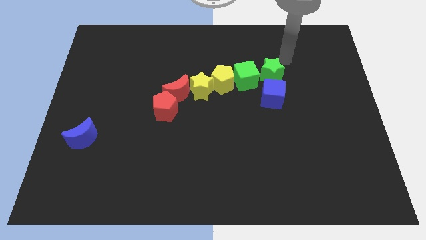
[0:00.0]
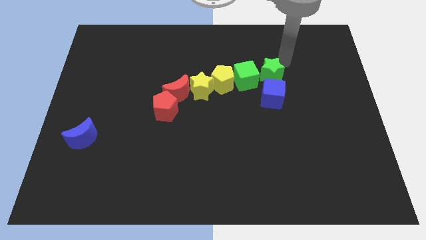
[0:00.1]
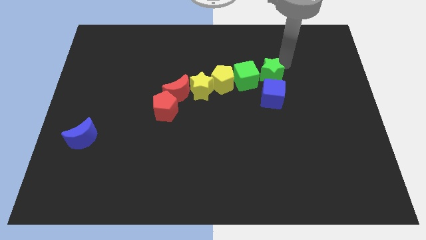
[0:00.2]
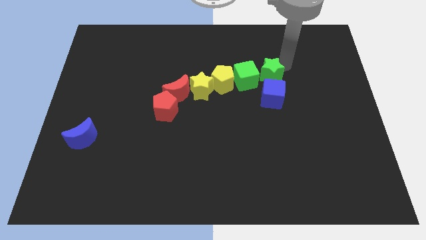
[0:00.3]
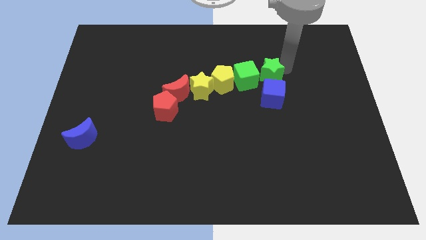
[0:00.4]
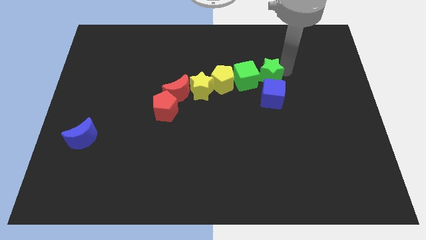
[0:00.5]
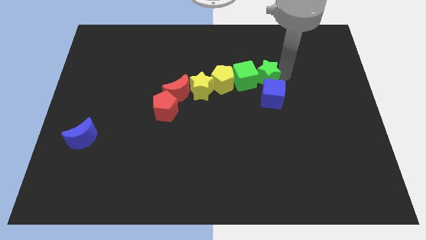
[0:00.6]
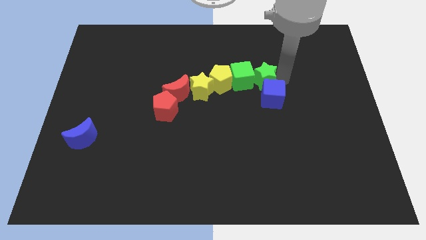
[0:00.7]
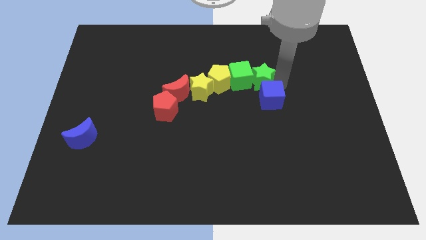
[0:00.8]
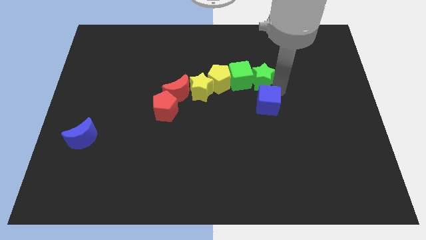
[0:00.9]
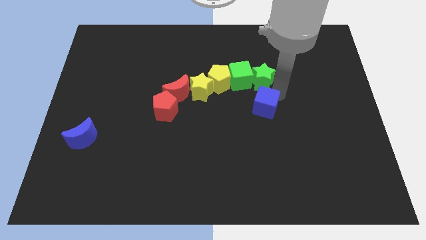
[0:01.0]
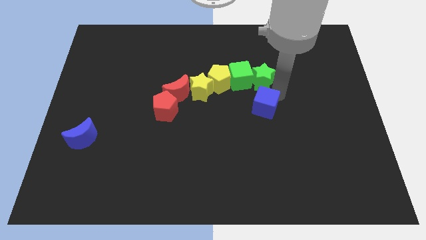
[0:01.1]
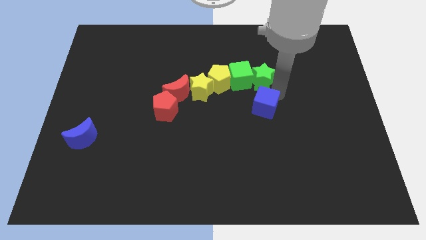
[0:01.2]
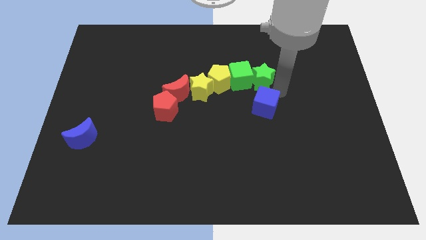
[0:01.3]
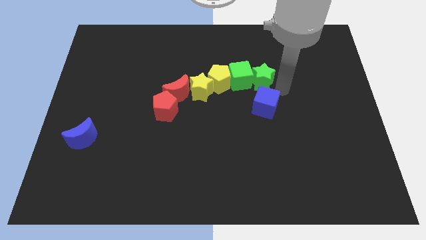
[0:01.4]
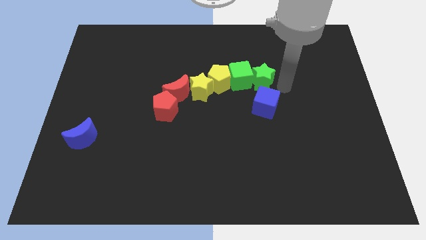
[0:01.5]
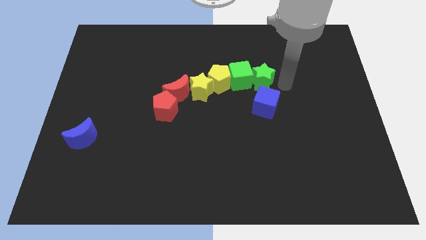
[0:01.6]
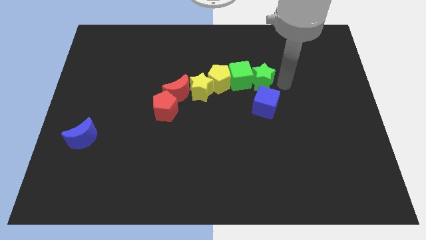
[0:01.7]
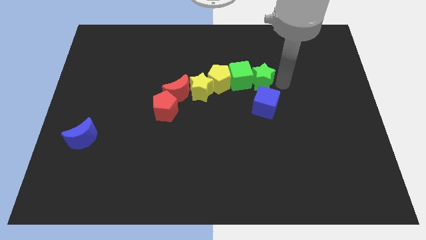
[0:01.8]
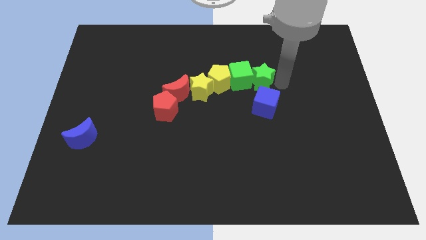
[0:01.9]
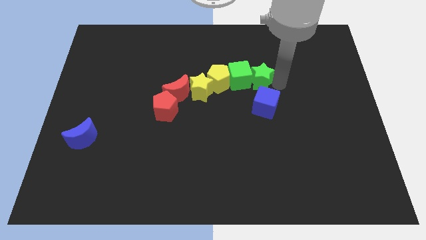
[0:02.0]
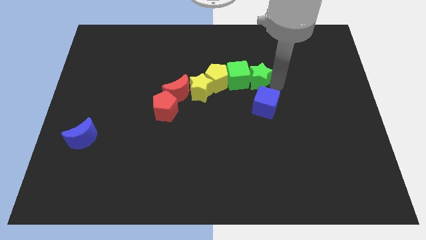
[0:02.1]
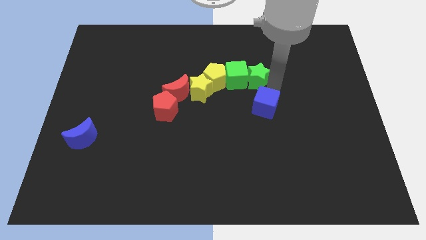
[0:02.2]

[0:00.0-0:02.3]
touch green cube with green star

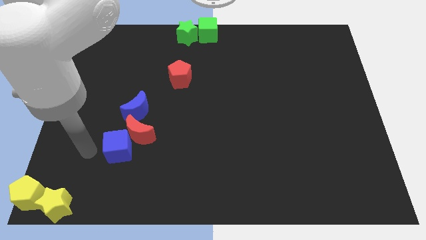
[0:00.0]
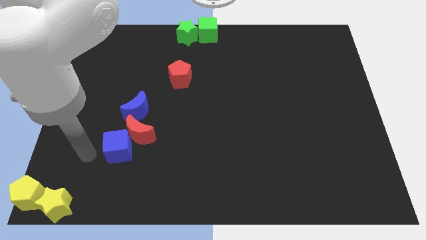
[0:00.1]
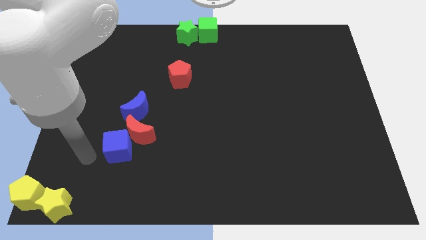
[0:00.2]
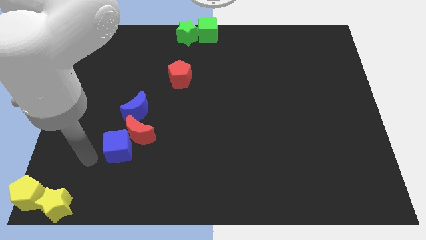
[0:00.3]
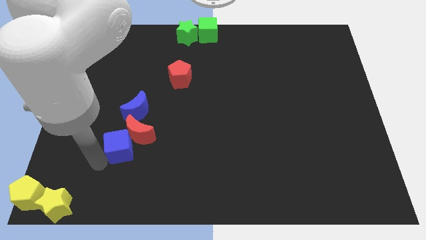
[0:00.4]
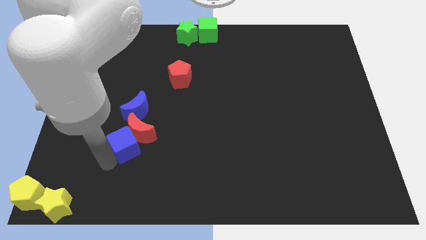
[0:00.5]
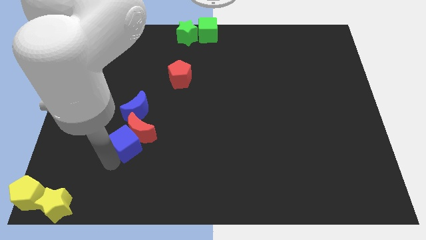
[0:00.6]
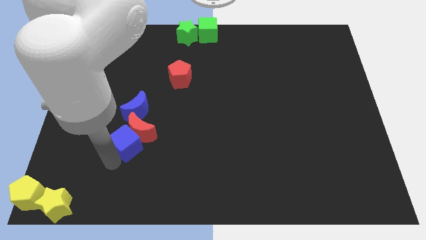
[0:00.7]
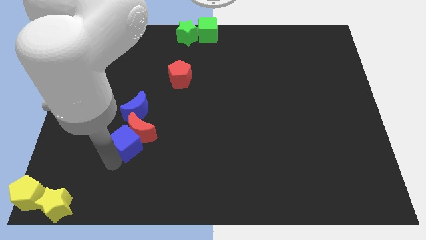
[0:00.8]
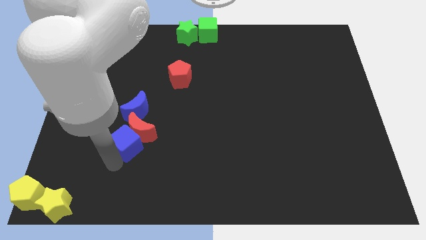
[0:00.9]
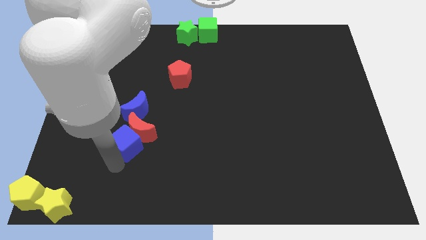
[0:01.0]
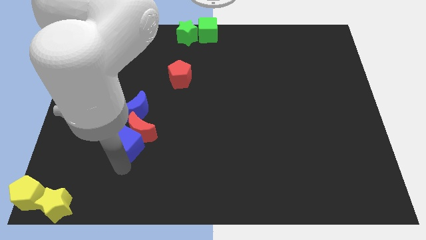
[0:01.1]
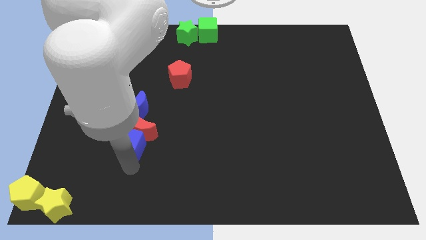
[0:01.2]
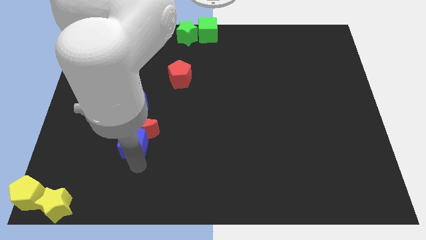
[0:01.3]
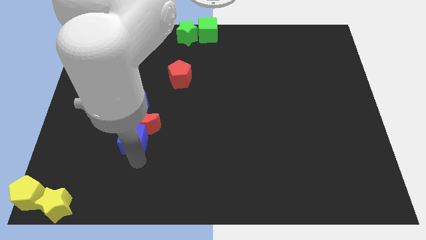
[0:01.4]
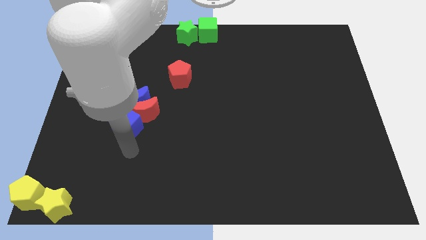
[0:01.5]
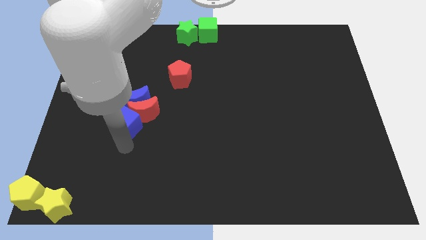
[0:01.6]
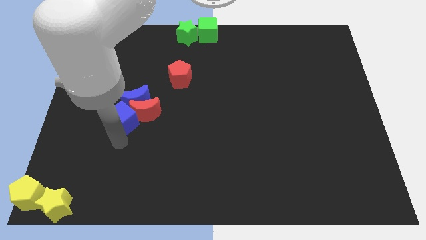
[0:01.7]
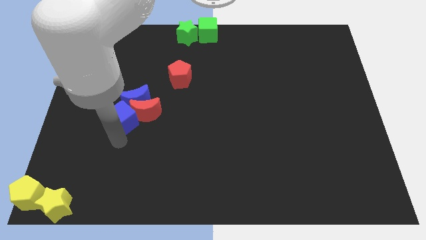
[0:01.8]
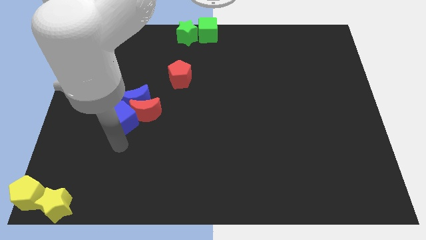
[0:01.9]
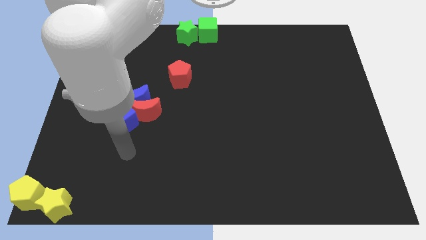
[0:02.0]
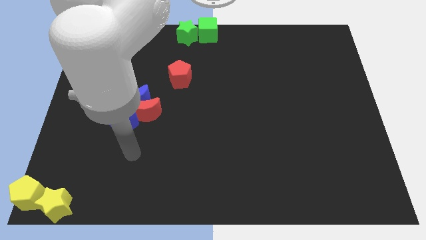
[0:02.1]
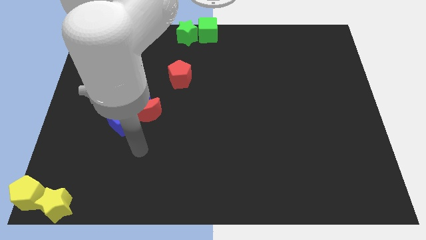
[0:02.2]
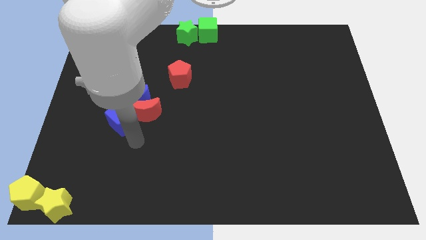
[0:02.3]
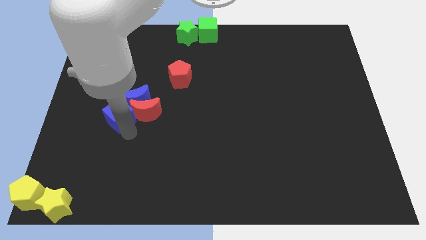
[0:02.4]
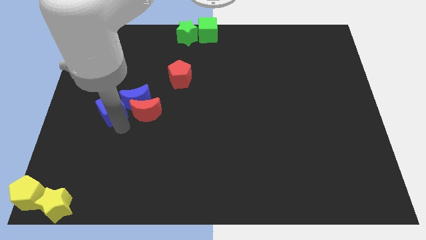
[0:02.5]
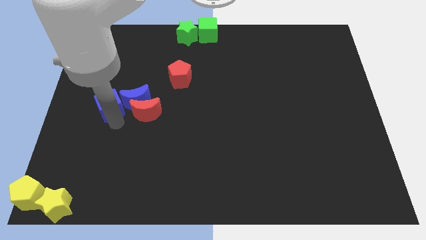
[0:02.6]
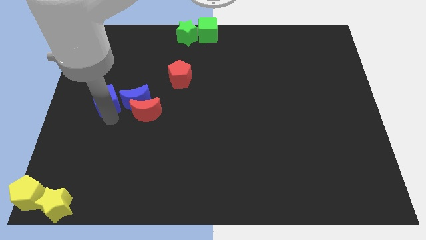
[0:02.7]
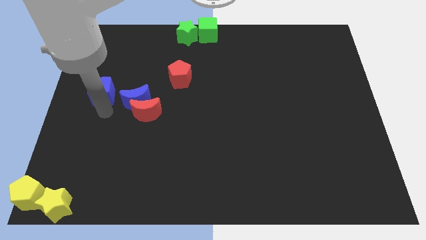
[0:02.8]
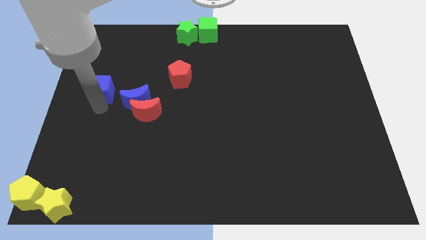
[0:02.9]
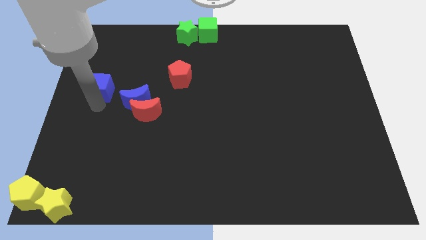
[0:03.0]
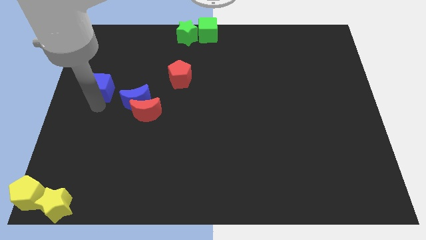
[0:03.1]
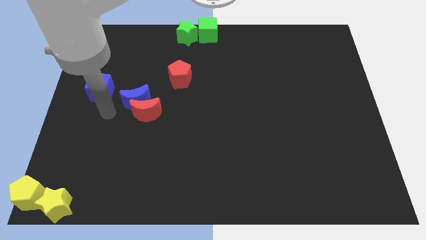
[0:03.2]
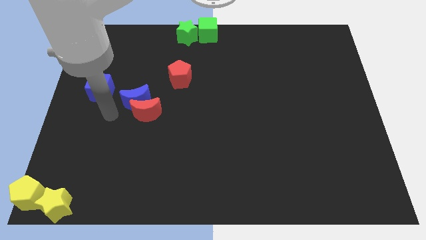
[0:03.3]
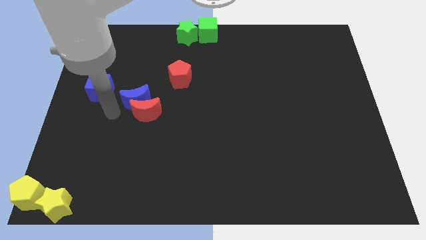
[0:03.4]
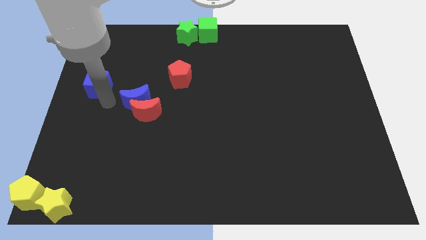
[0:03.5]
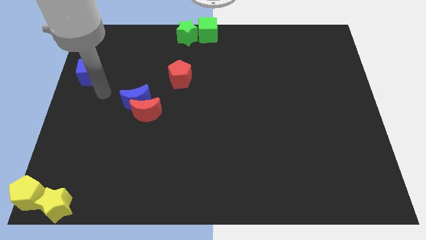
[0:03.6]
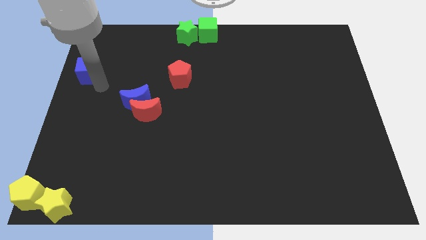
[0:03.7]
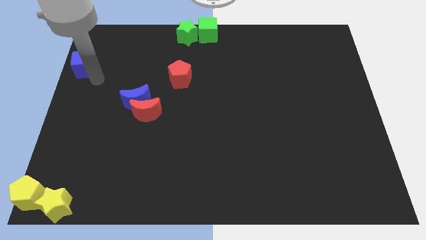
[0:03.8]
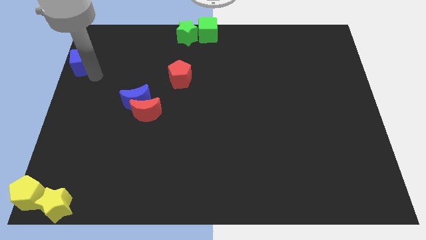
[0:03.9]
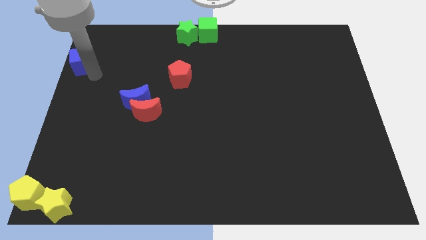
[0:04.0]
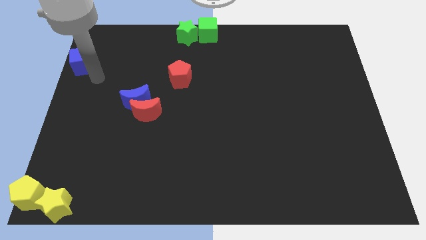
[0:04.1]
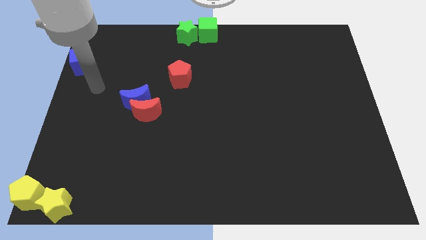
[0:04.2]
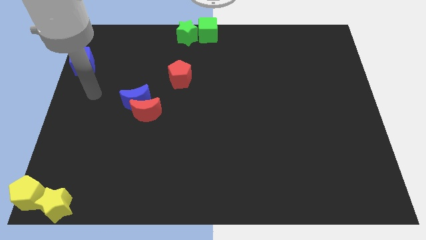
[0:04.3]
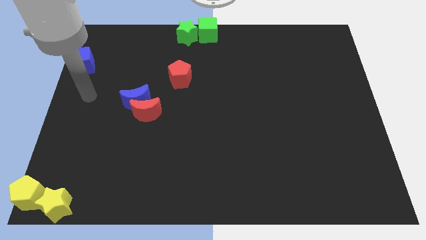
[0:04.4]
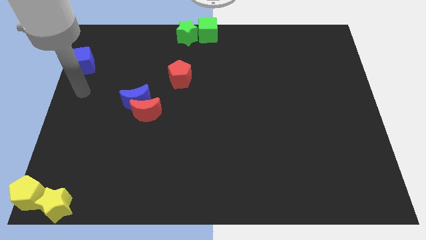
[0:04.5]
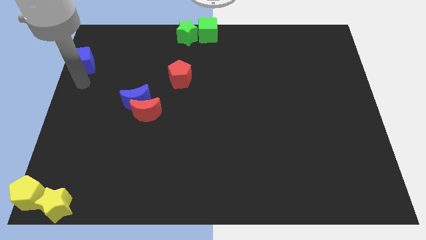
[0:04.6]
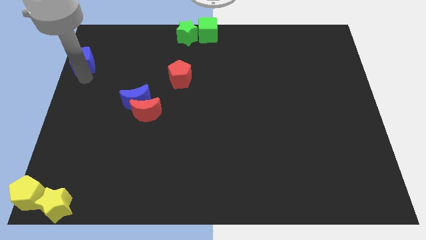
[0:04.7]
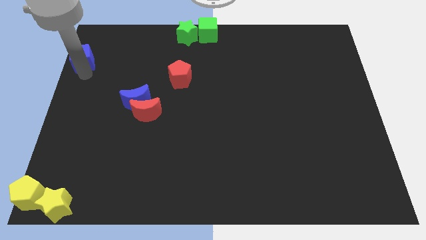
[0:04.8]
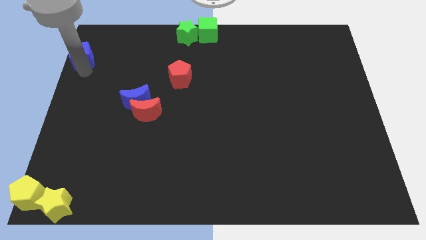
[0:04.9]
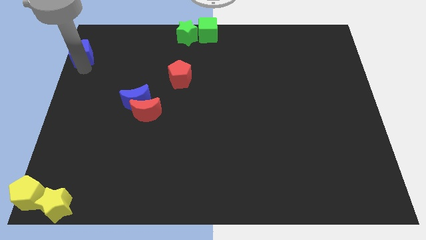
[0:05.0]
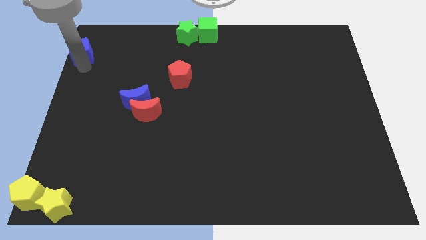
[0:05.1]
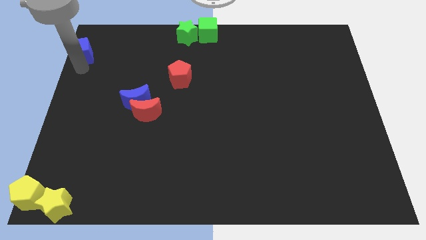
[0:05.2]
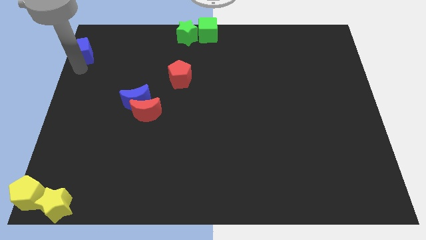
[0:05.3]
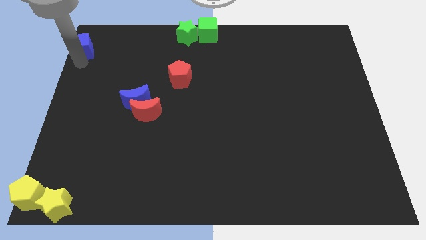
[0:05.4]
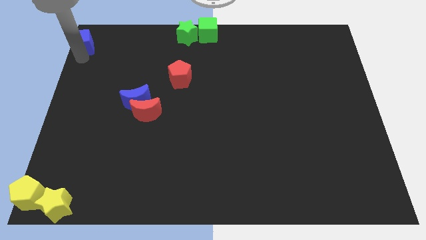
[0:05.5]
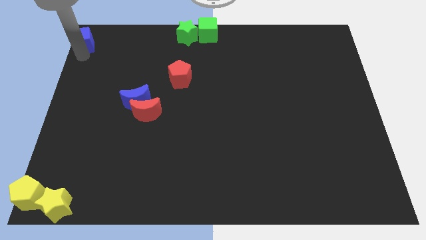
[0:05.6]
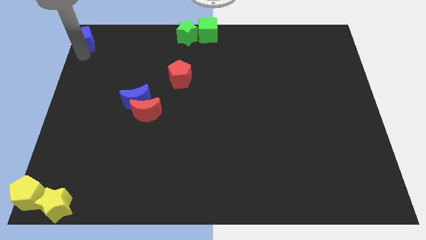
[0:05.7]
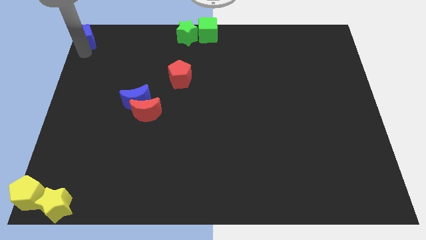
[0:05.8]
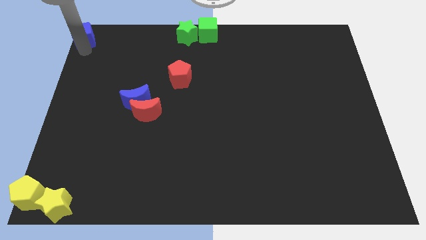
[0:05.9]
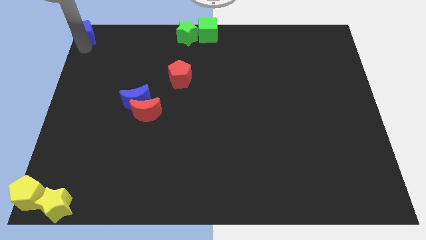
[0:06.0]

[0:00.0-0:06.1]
move the blue cube to the top left

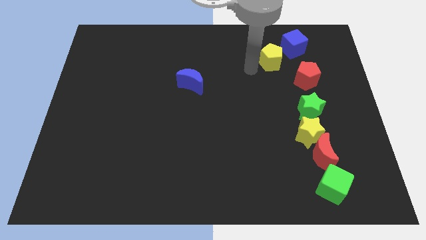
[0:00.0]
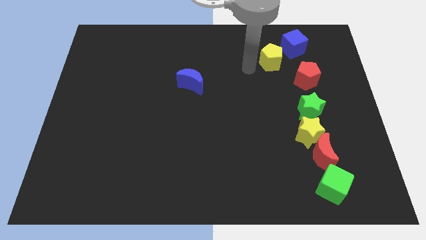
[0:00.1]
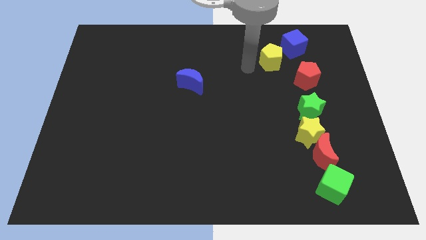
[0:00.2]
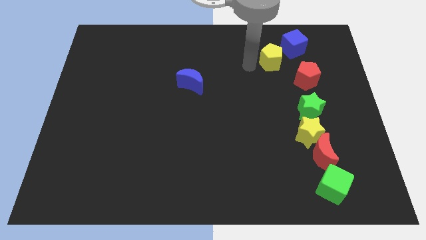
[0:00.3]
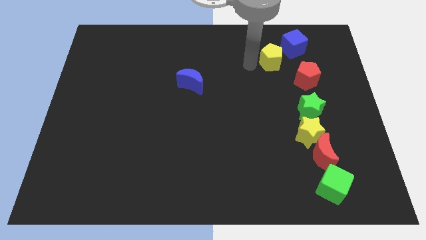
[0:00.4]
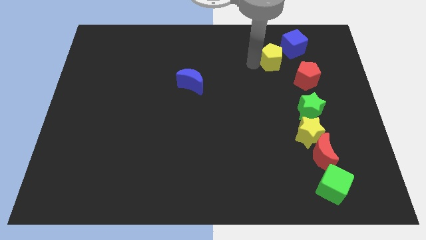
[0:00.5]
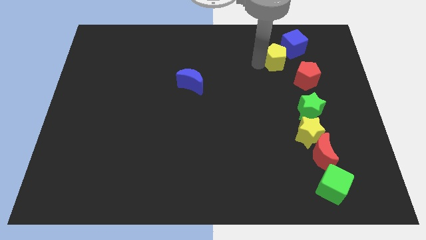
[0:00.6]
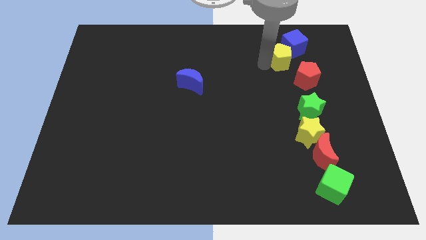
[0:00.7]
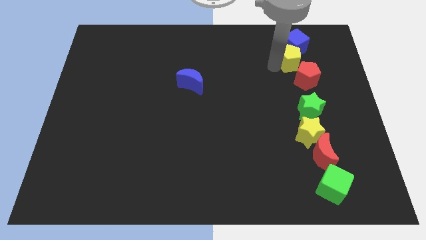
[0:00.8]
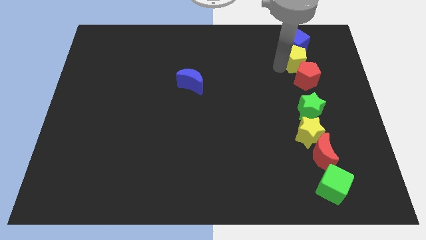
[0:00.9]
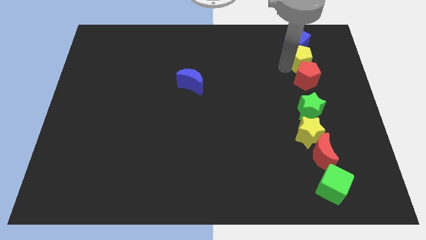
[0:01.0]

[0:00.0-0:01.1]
move the yellow pentagon in between the red pentagon blue block
